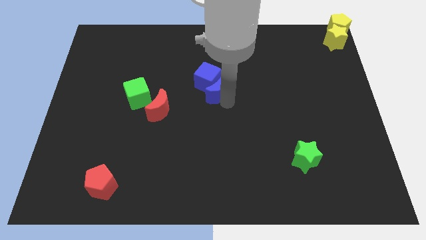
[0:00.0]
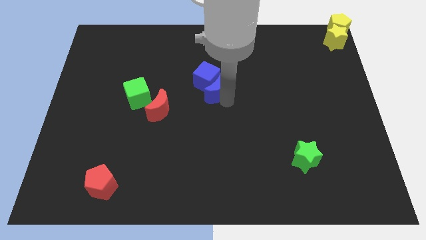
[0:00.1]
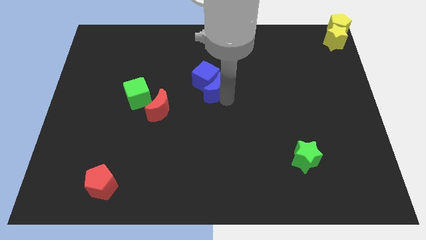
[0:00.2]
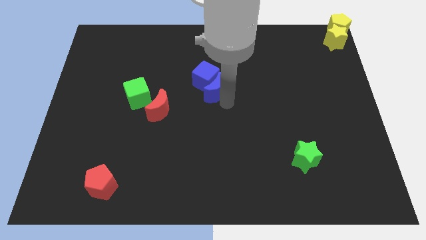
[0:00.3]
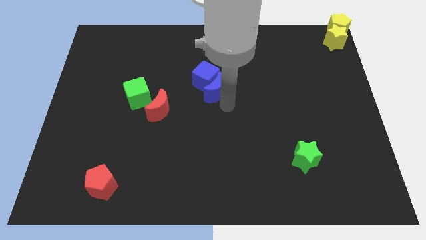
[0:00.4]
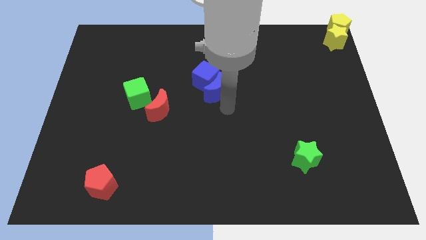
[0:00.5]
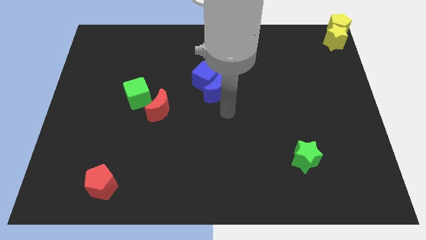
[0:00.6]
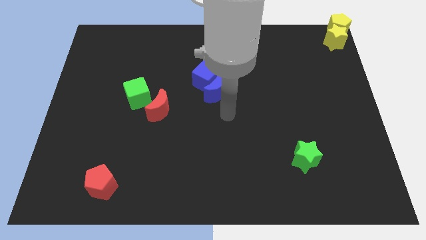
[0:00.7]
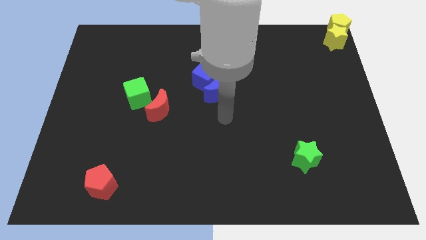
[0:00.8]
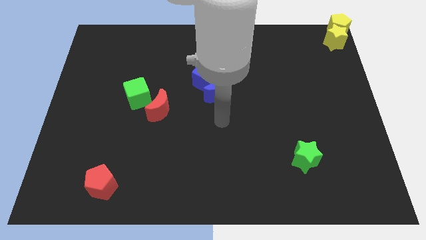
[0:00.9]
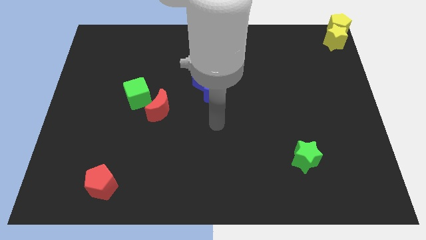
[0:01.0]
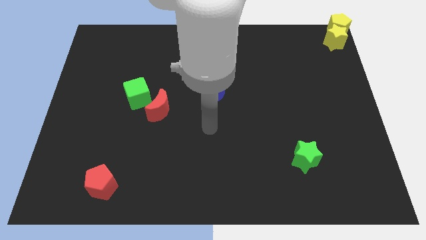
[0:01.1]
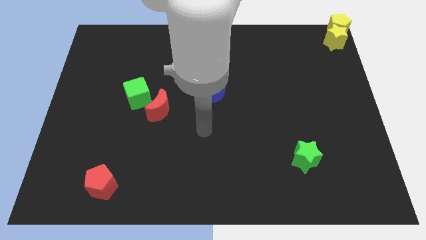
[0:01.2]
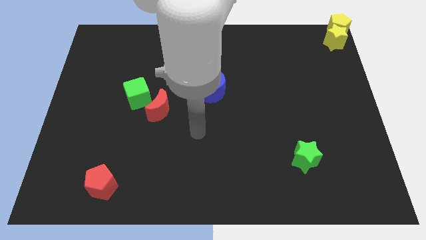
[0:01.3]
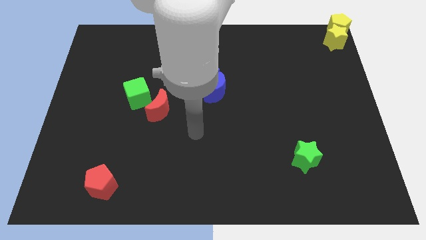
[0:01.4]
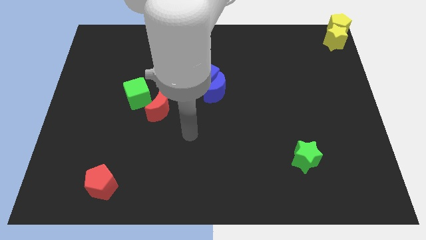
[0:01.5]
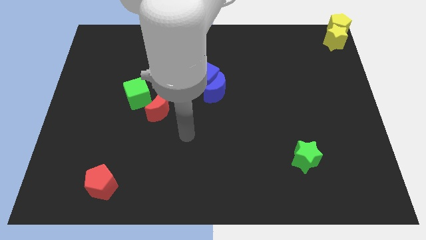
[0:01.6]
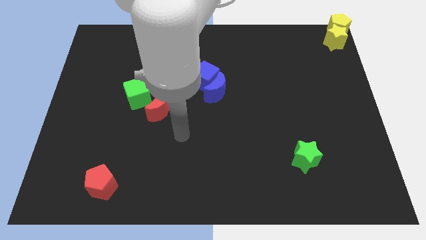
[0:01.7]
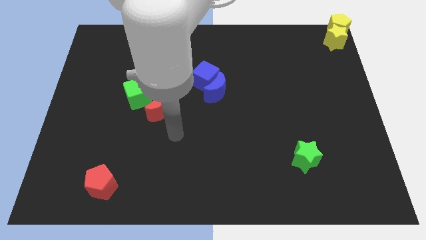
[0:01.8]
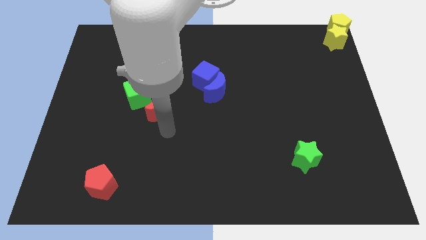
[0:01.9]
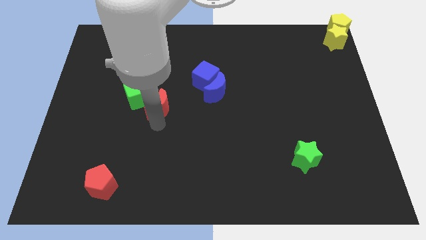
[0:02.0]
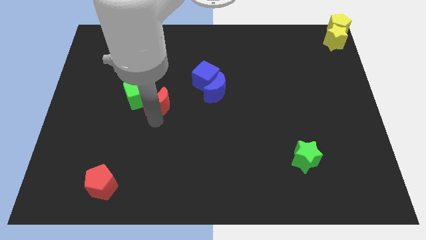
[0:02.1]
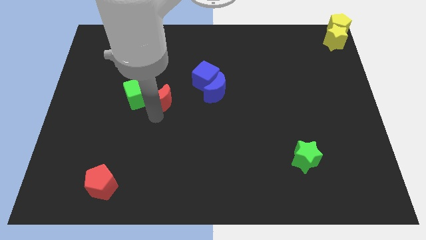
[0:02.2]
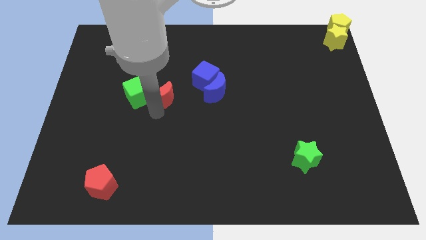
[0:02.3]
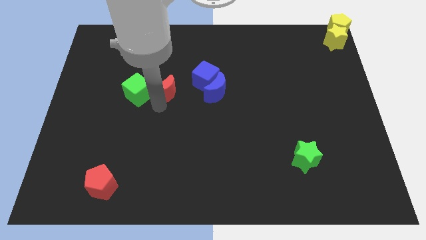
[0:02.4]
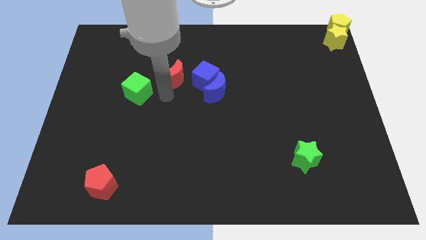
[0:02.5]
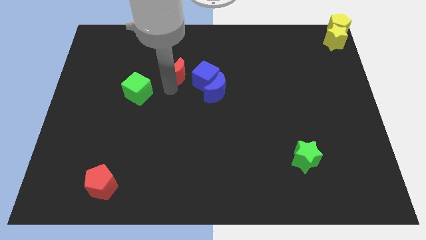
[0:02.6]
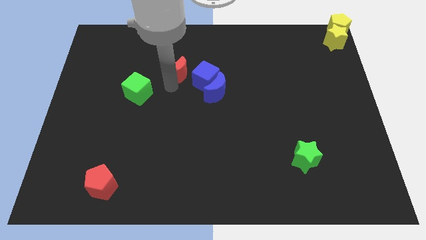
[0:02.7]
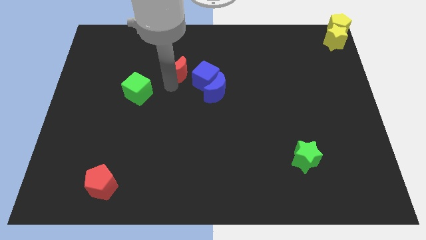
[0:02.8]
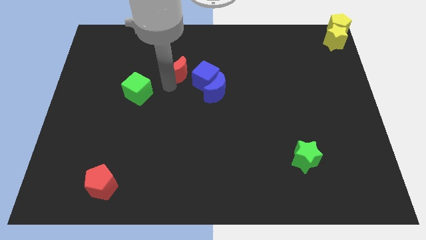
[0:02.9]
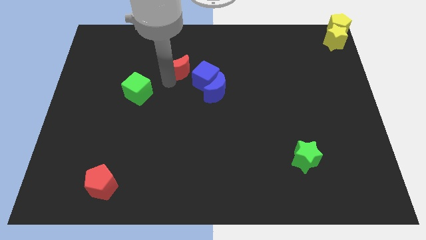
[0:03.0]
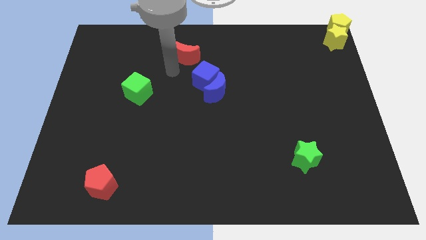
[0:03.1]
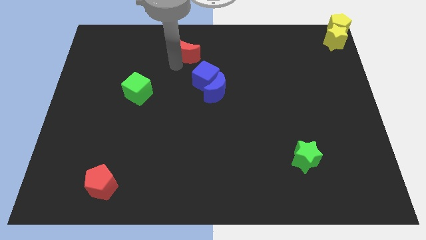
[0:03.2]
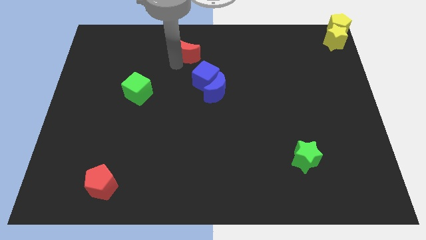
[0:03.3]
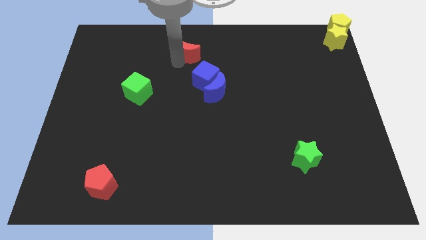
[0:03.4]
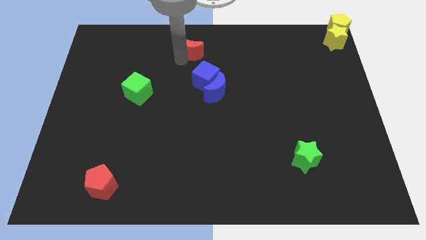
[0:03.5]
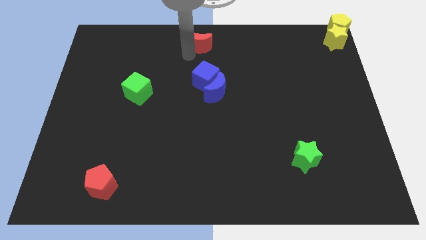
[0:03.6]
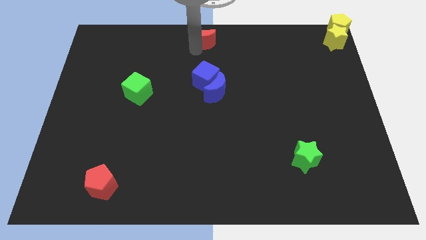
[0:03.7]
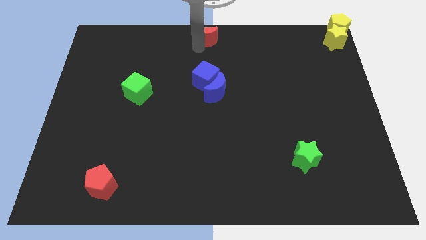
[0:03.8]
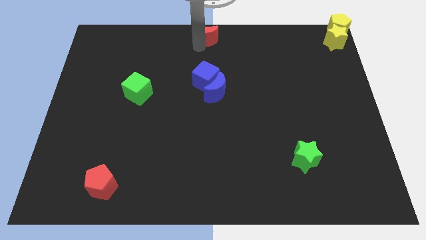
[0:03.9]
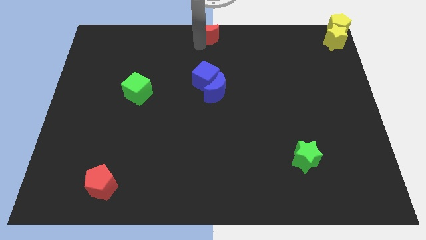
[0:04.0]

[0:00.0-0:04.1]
move the red moon to top center of the board

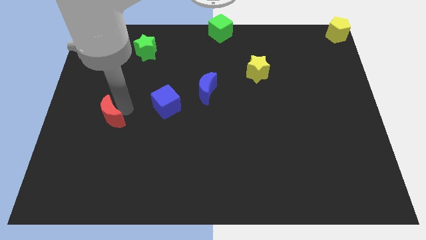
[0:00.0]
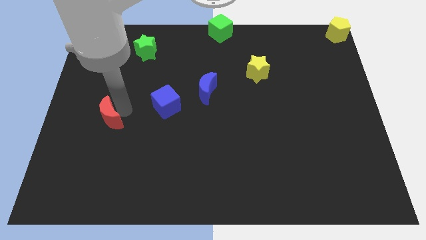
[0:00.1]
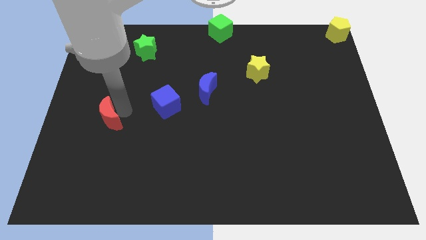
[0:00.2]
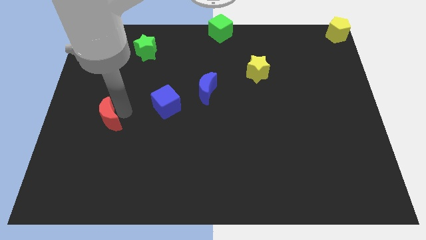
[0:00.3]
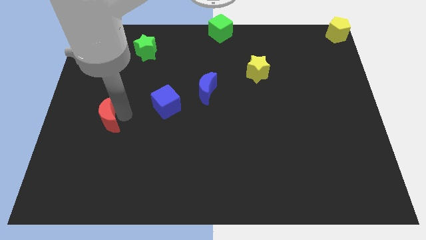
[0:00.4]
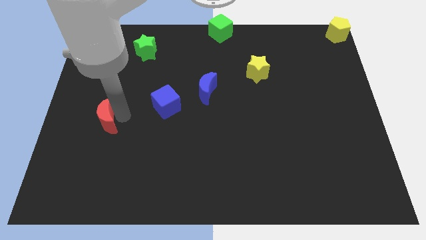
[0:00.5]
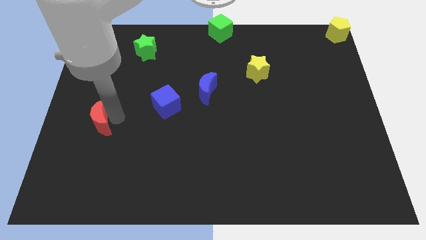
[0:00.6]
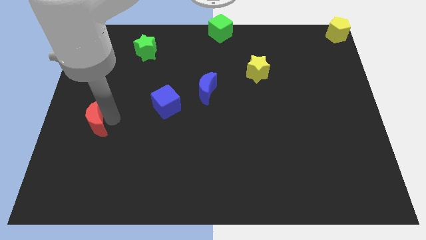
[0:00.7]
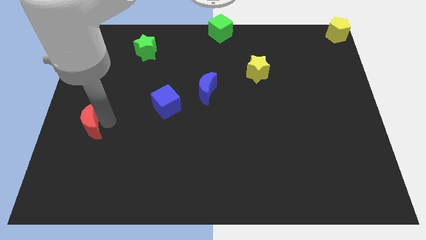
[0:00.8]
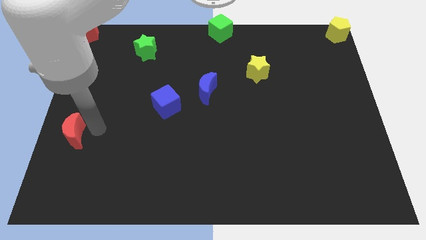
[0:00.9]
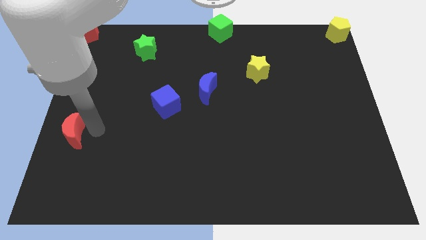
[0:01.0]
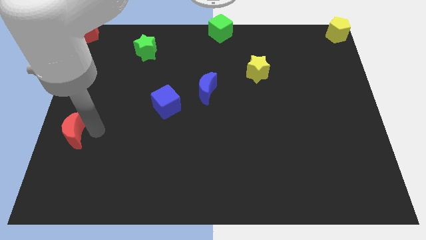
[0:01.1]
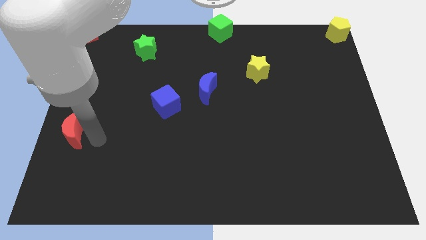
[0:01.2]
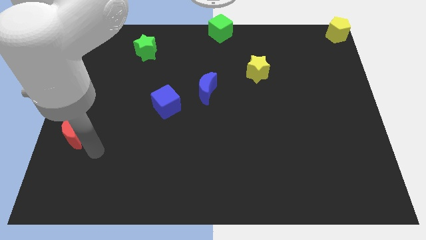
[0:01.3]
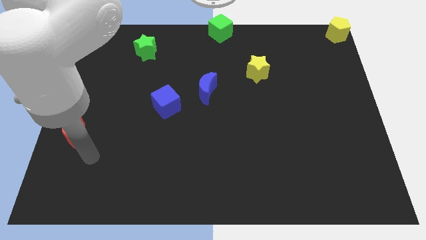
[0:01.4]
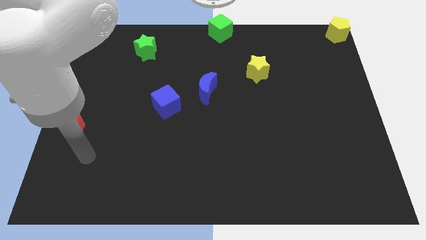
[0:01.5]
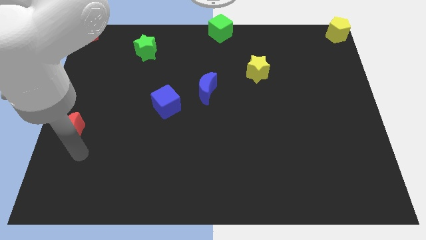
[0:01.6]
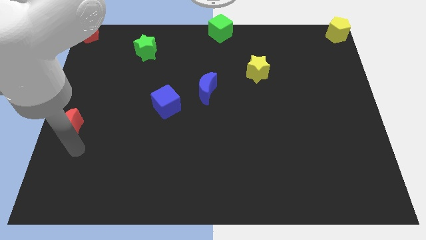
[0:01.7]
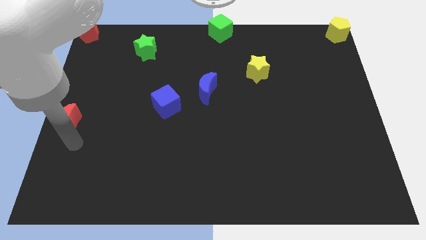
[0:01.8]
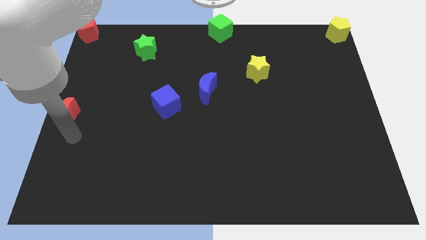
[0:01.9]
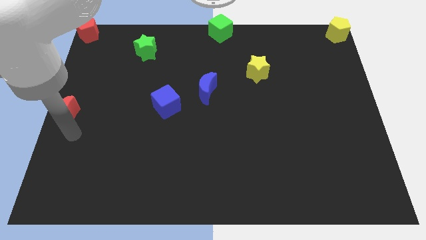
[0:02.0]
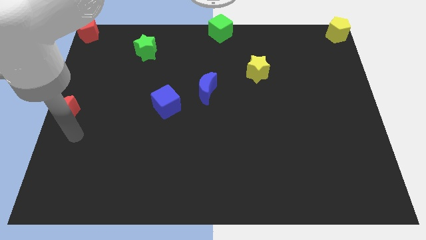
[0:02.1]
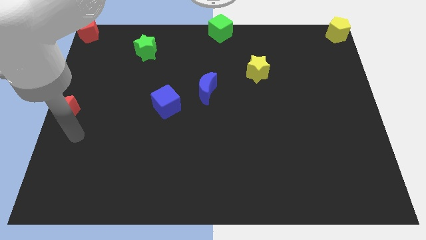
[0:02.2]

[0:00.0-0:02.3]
push the red crescent towards the left center of the board

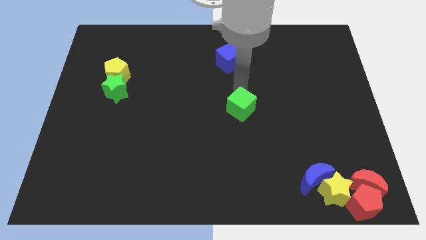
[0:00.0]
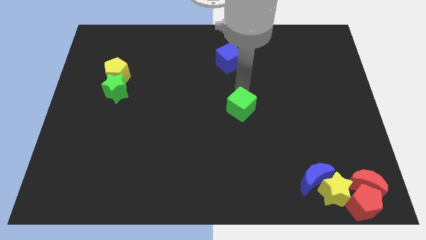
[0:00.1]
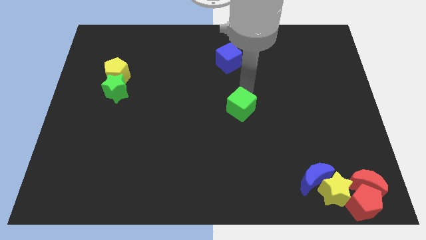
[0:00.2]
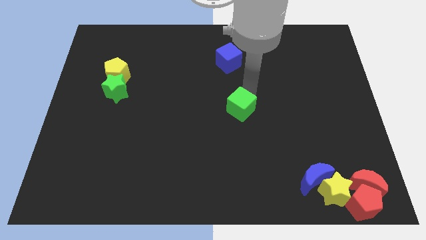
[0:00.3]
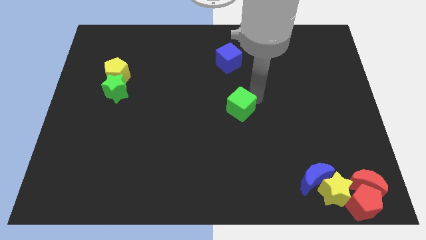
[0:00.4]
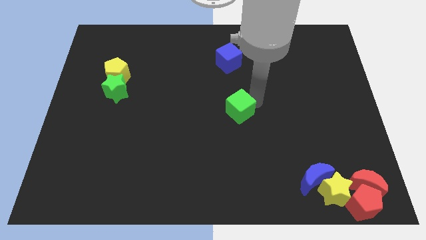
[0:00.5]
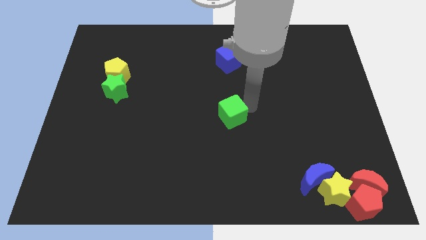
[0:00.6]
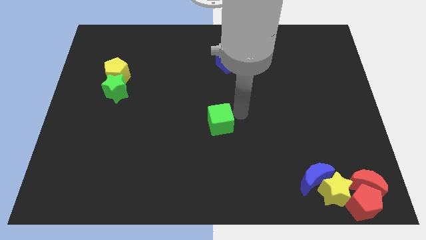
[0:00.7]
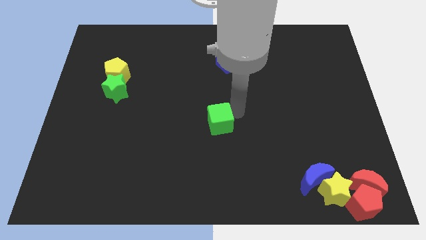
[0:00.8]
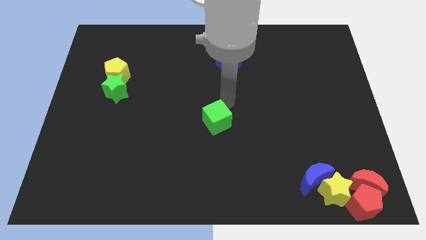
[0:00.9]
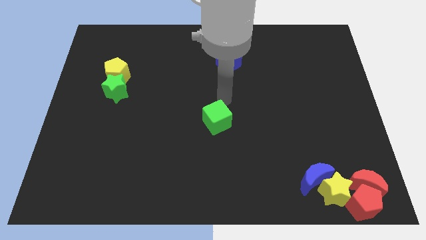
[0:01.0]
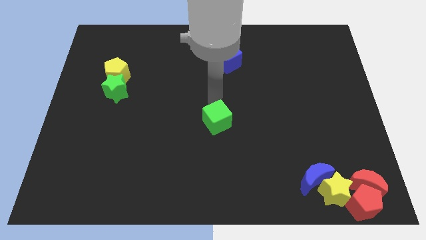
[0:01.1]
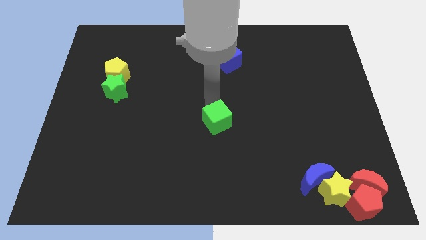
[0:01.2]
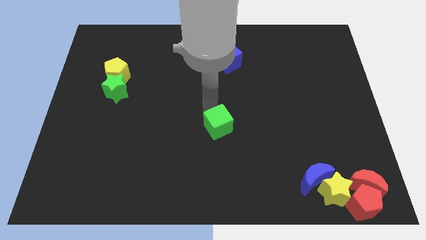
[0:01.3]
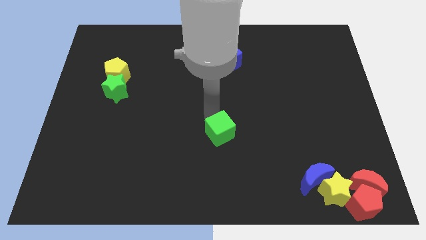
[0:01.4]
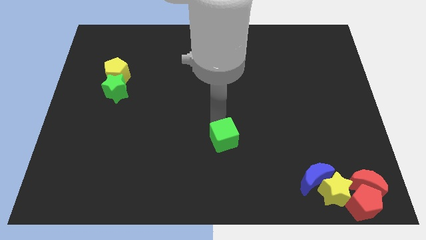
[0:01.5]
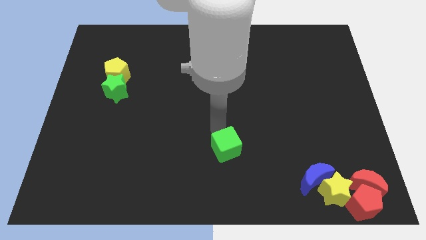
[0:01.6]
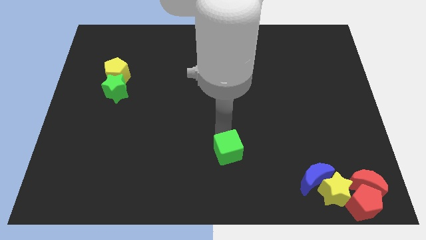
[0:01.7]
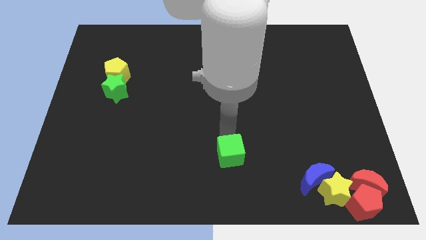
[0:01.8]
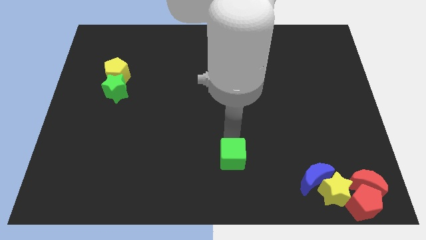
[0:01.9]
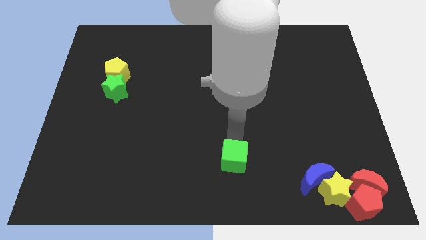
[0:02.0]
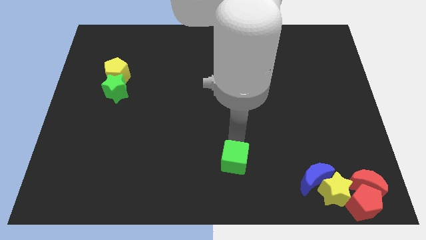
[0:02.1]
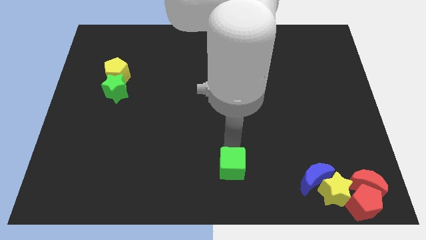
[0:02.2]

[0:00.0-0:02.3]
push the green cube to the bottom center

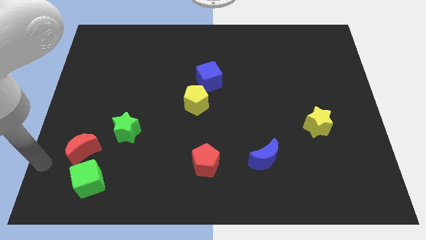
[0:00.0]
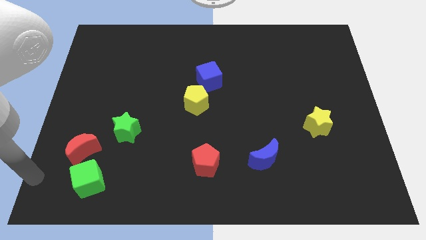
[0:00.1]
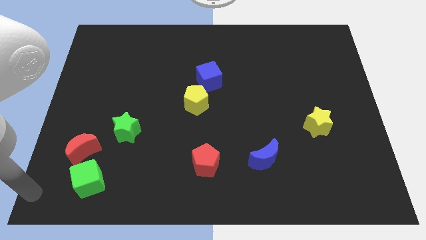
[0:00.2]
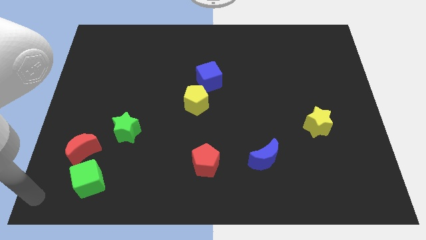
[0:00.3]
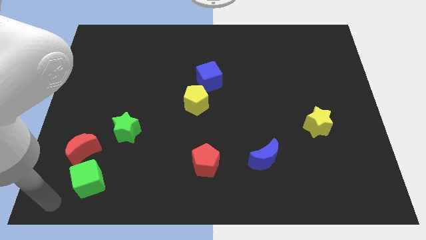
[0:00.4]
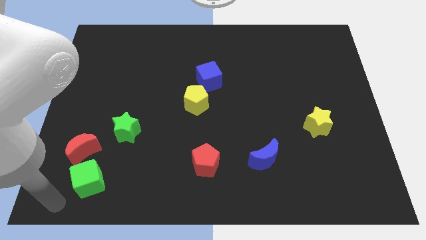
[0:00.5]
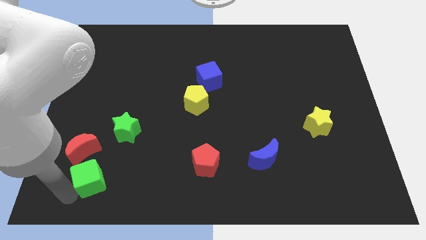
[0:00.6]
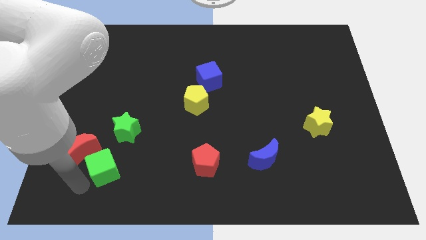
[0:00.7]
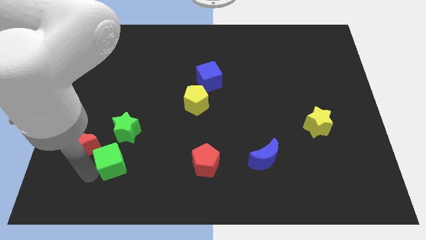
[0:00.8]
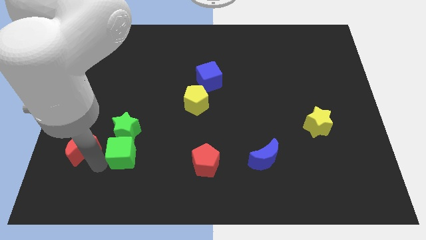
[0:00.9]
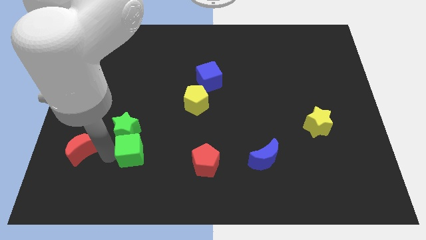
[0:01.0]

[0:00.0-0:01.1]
move the green cube into the green star
